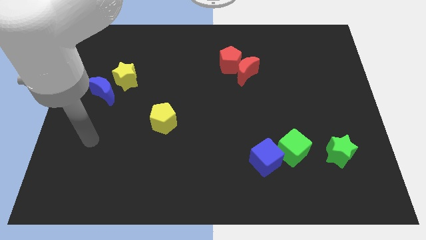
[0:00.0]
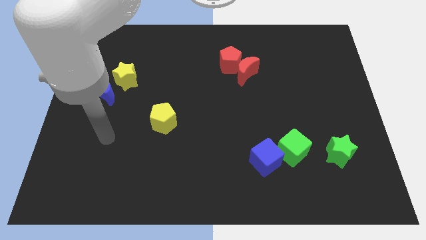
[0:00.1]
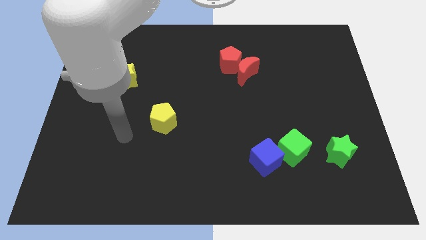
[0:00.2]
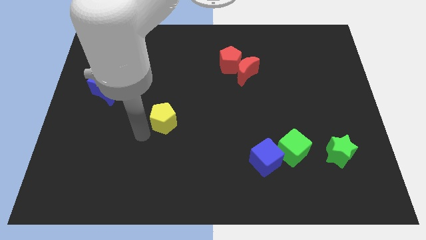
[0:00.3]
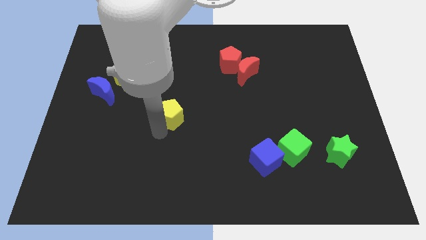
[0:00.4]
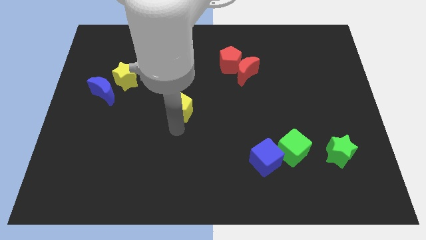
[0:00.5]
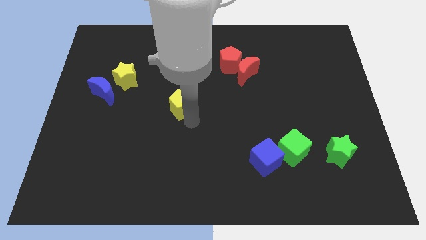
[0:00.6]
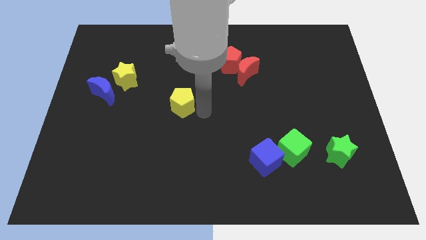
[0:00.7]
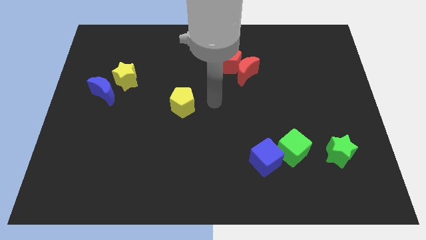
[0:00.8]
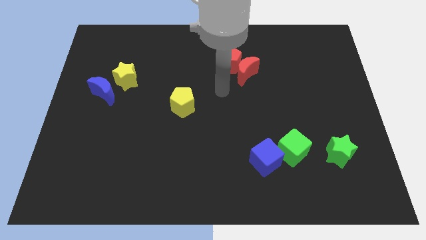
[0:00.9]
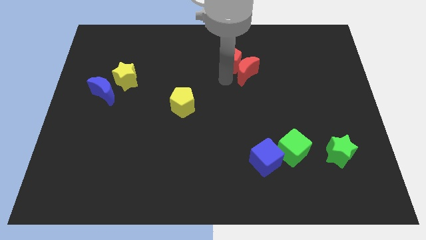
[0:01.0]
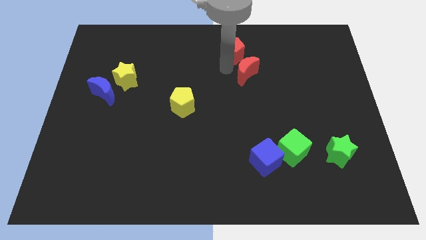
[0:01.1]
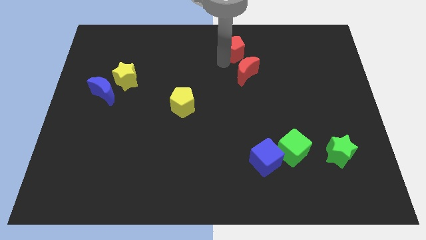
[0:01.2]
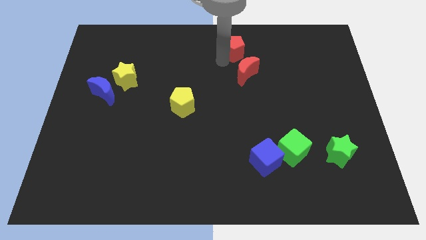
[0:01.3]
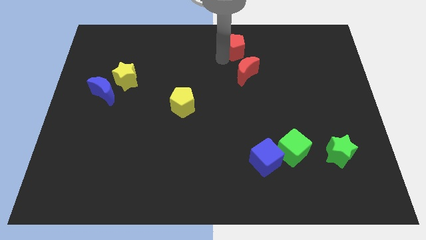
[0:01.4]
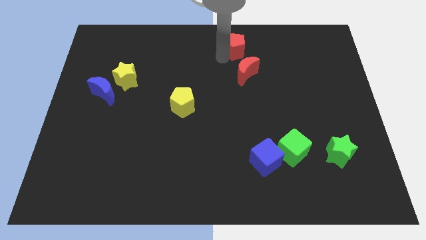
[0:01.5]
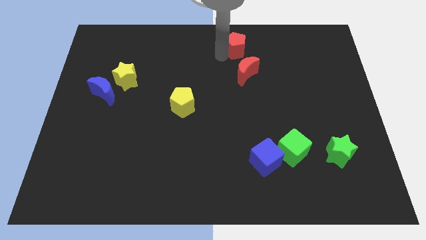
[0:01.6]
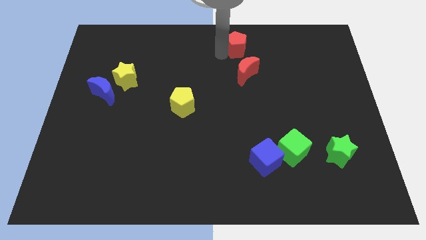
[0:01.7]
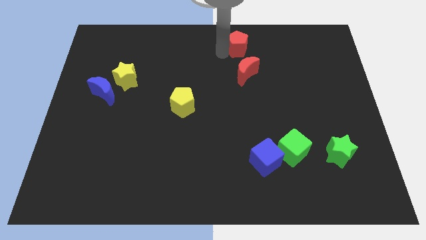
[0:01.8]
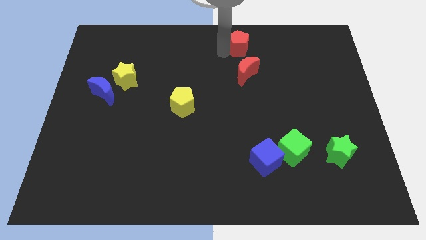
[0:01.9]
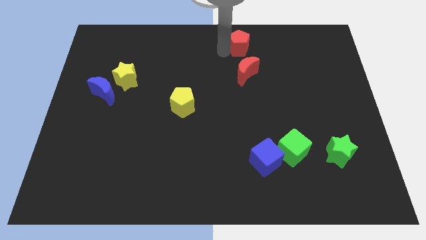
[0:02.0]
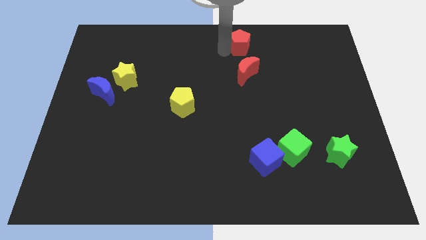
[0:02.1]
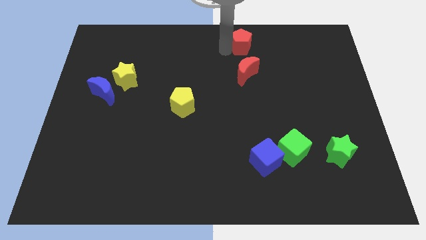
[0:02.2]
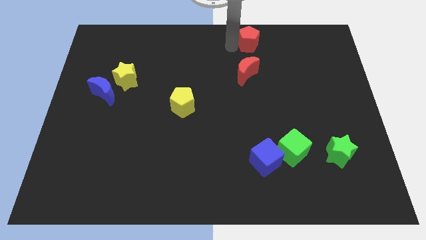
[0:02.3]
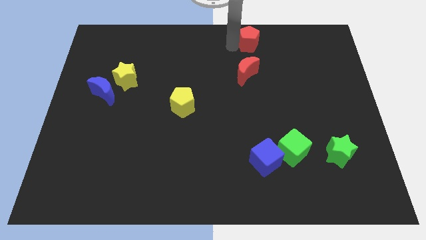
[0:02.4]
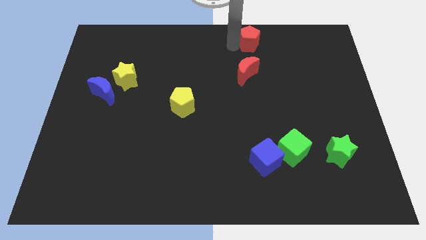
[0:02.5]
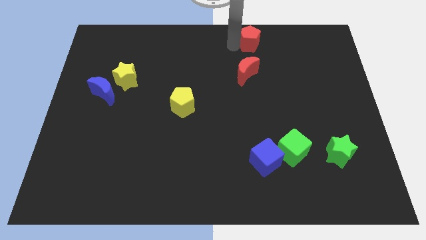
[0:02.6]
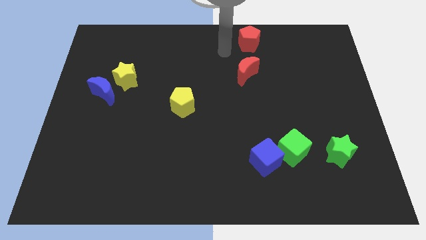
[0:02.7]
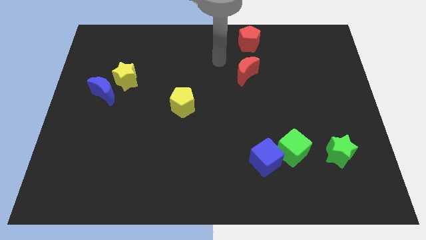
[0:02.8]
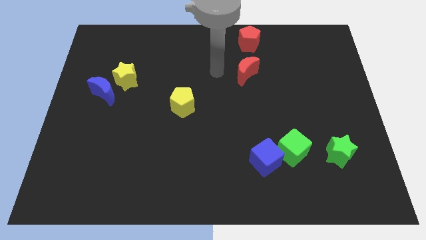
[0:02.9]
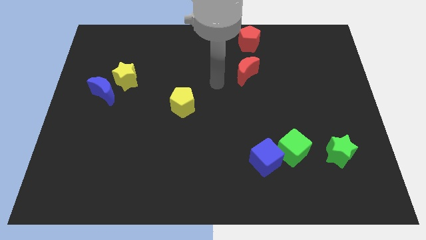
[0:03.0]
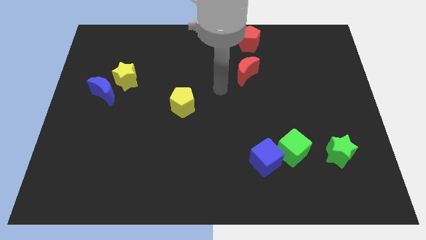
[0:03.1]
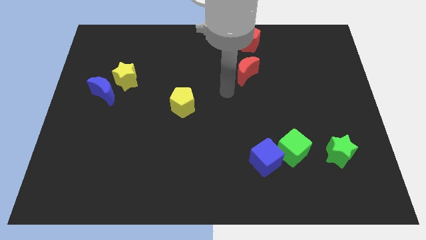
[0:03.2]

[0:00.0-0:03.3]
place the red pentagon vertically above the red moon

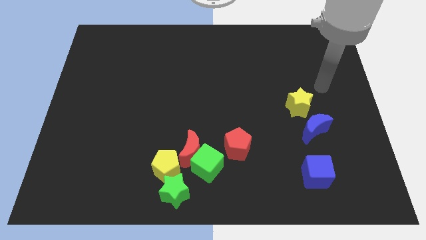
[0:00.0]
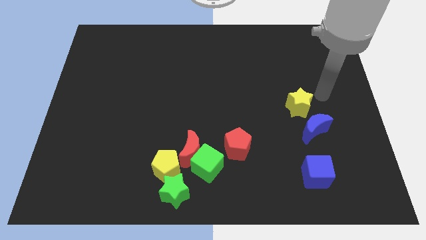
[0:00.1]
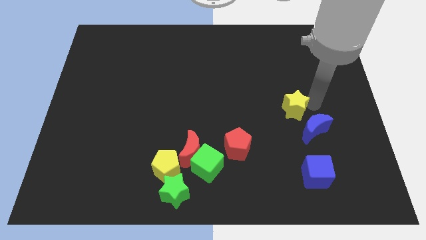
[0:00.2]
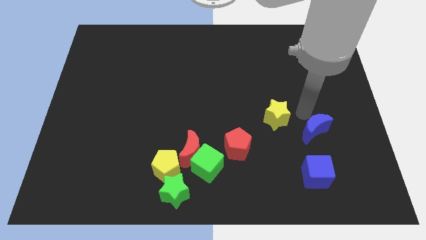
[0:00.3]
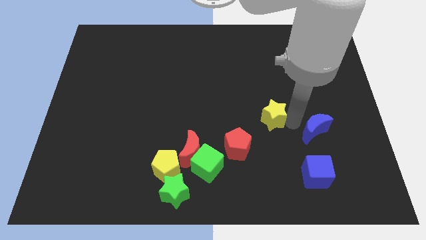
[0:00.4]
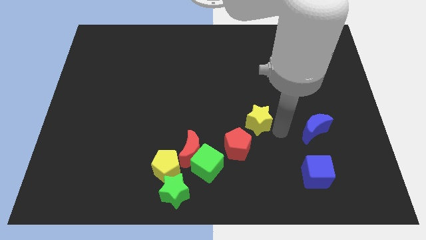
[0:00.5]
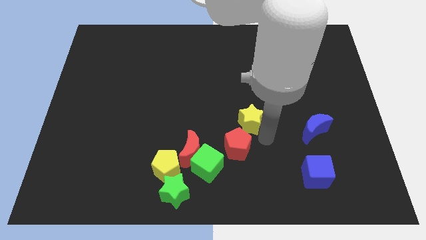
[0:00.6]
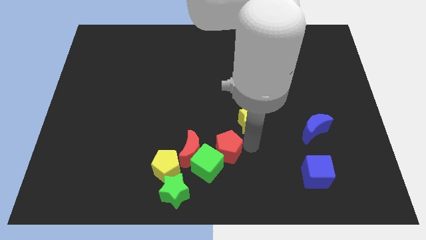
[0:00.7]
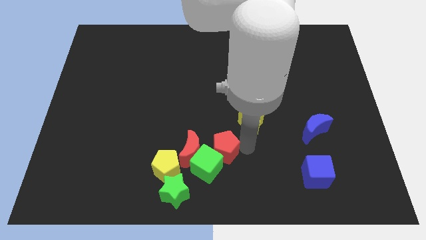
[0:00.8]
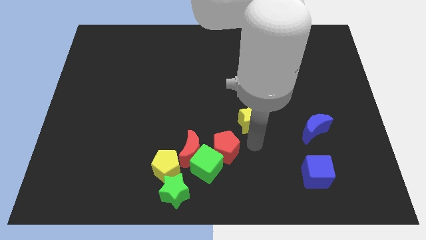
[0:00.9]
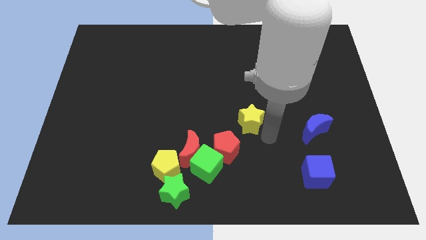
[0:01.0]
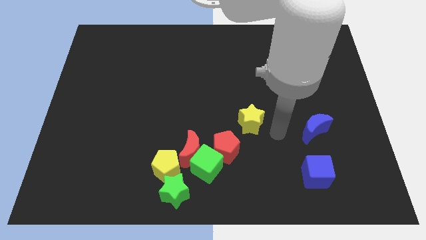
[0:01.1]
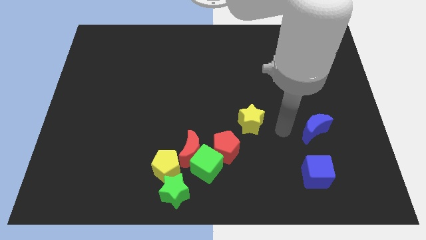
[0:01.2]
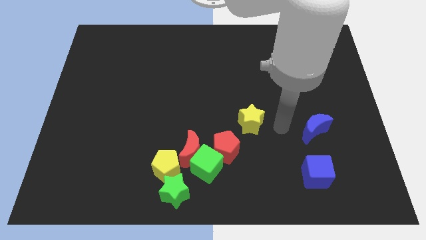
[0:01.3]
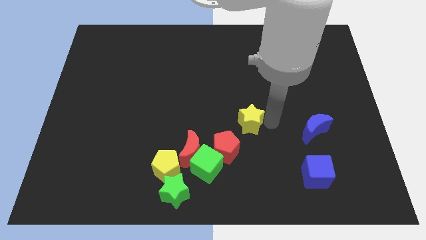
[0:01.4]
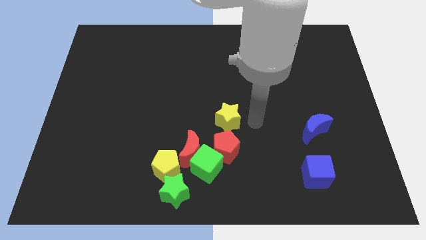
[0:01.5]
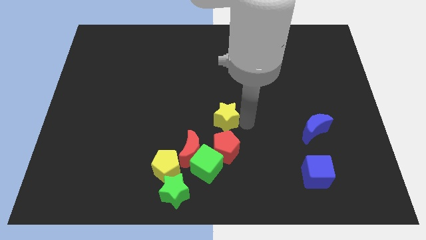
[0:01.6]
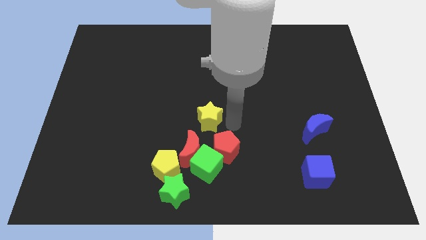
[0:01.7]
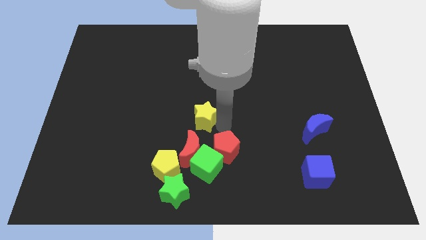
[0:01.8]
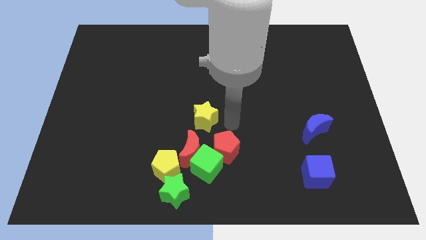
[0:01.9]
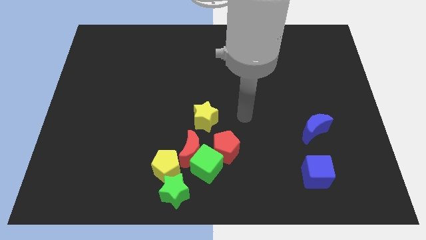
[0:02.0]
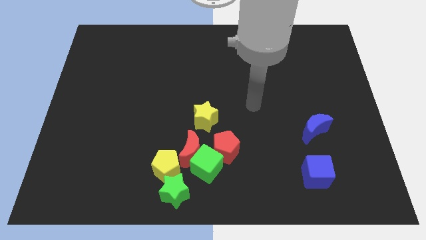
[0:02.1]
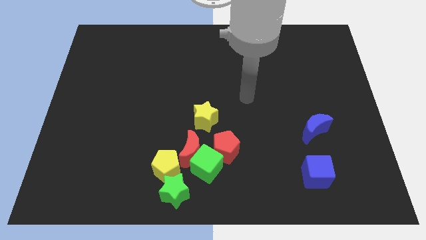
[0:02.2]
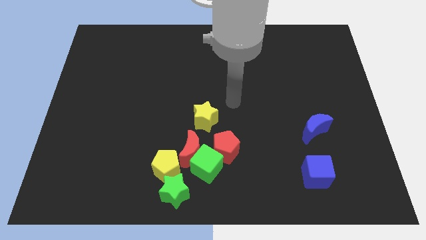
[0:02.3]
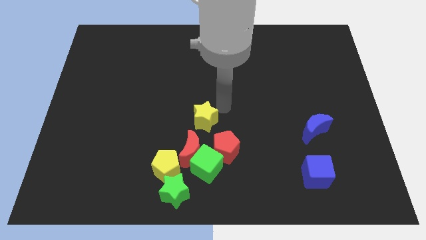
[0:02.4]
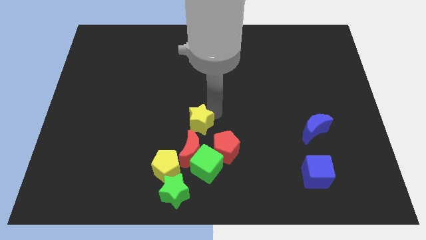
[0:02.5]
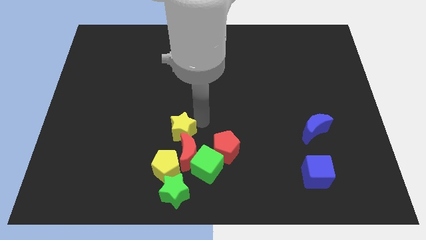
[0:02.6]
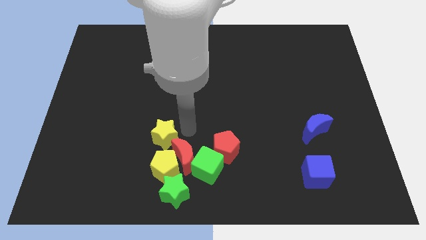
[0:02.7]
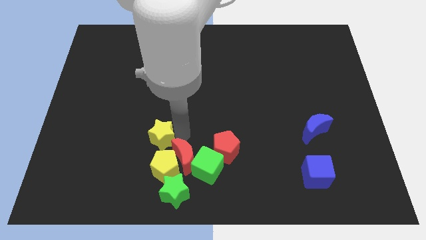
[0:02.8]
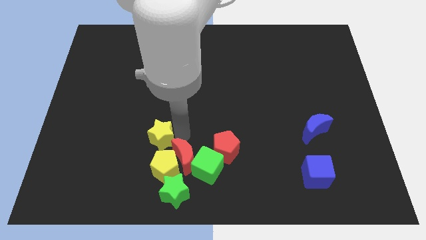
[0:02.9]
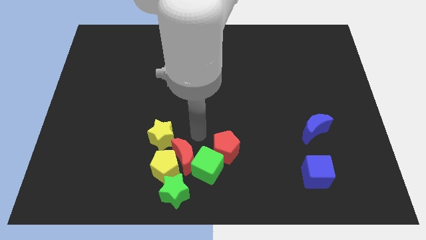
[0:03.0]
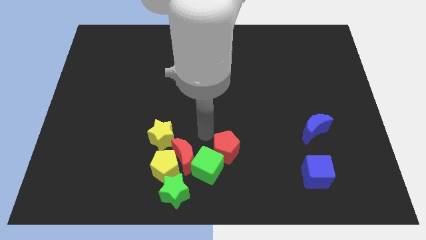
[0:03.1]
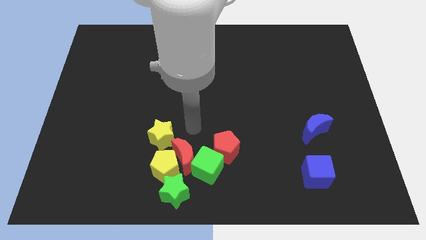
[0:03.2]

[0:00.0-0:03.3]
move the yellow star above yellow pentagon

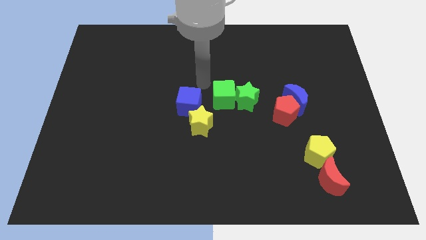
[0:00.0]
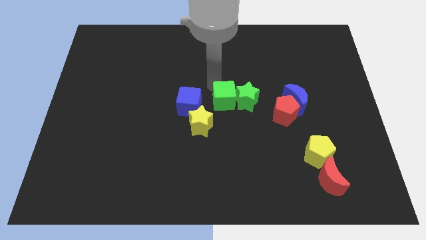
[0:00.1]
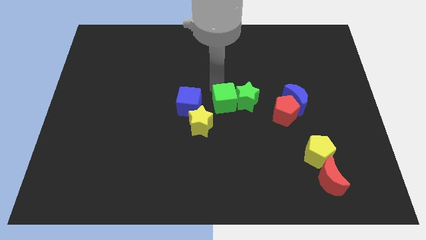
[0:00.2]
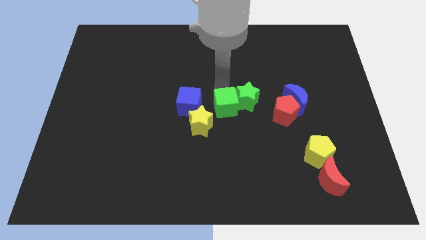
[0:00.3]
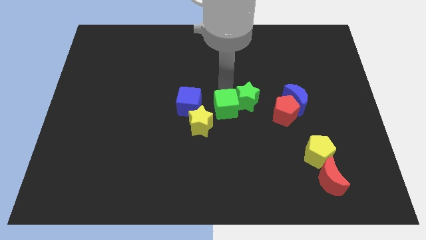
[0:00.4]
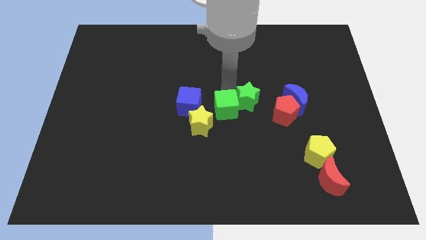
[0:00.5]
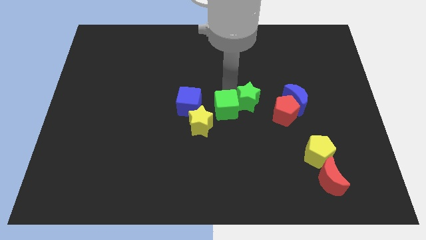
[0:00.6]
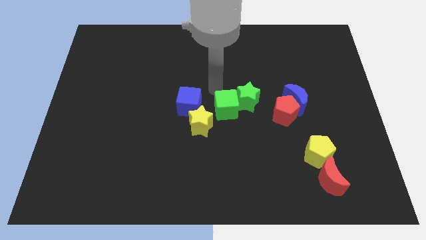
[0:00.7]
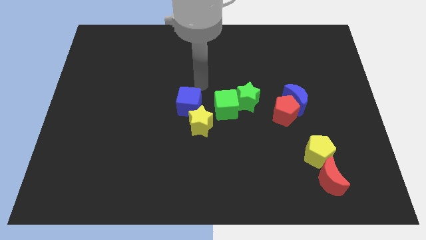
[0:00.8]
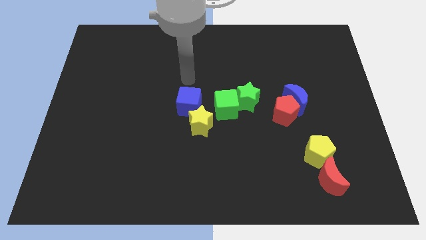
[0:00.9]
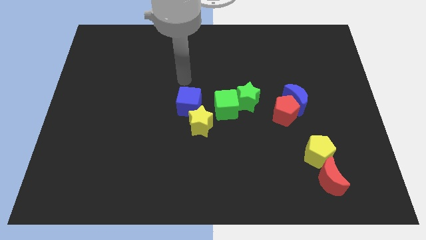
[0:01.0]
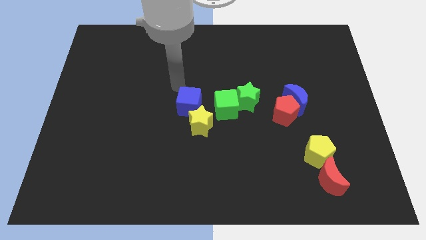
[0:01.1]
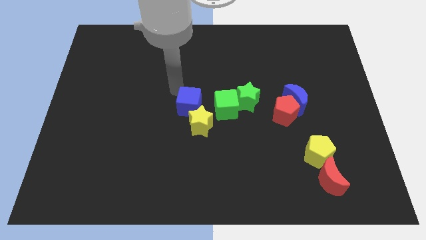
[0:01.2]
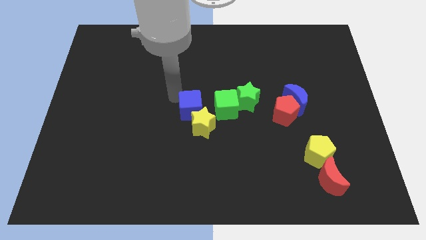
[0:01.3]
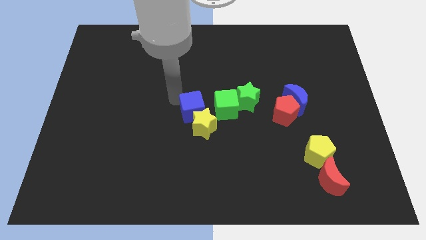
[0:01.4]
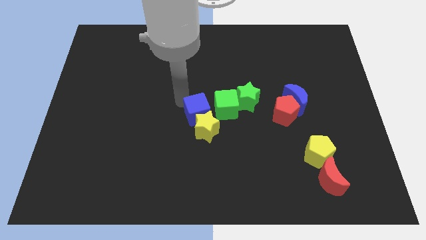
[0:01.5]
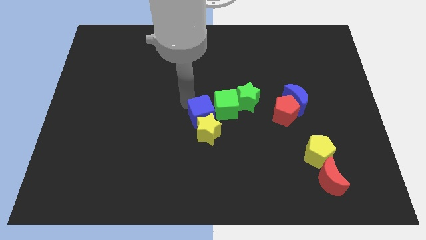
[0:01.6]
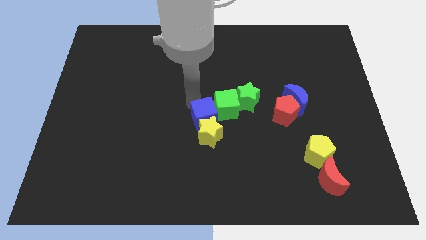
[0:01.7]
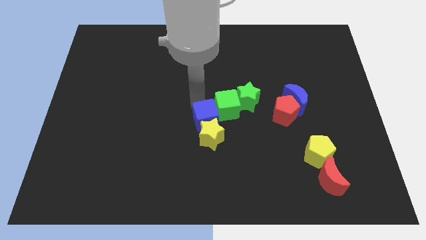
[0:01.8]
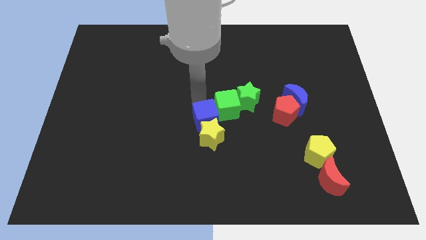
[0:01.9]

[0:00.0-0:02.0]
adjust the green cube and blue cube together

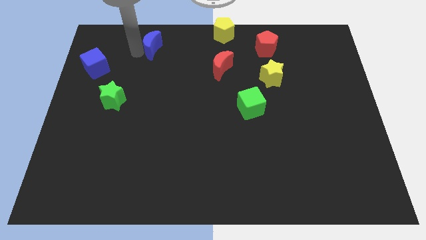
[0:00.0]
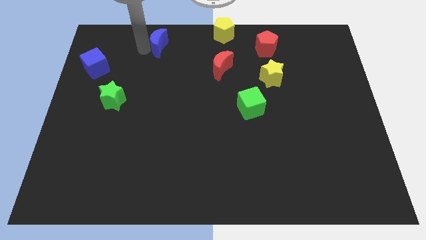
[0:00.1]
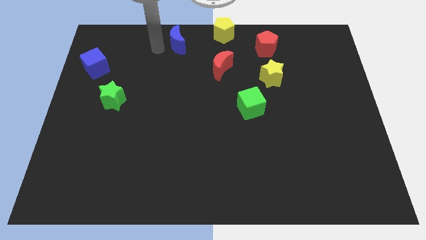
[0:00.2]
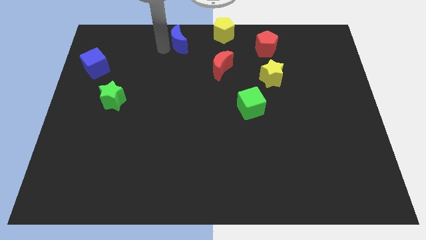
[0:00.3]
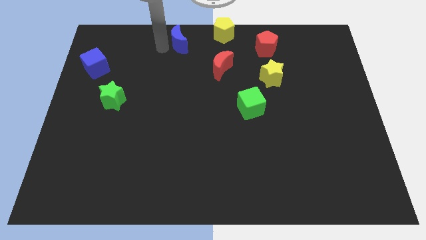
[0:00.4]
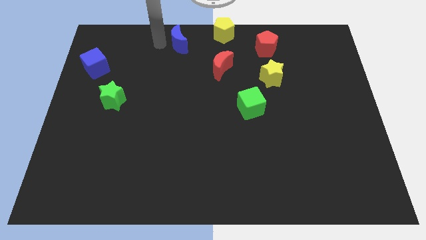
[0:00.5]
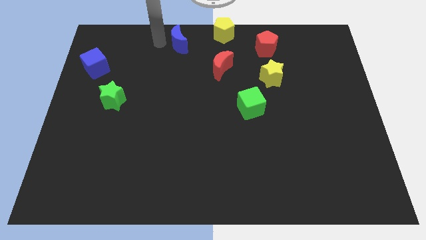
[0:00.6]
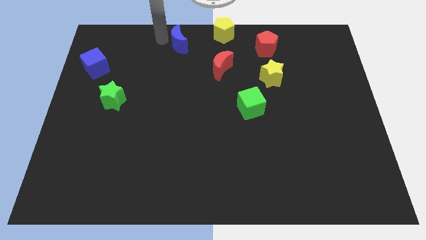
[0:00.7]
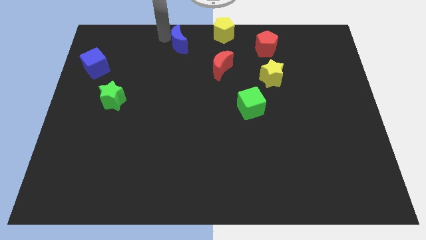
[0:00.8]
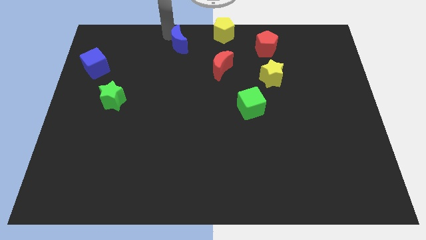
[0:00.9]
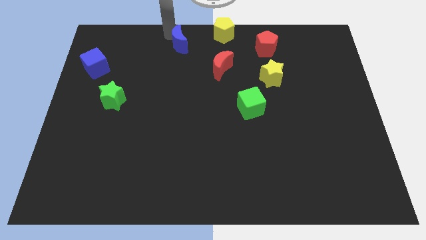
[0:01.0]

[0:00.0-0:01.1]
push the blue crescent to the left of the yellow pentagon
